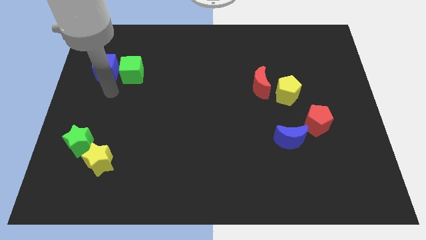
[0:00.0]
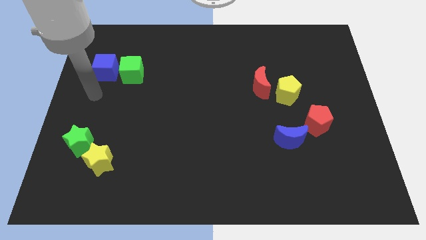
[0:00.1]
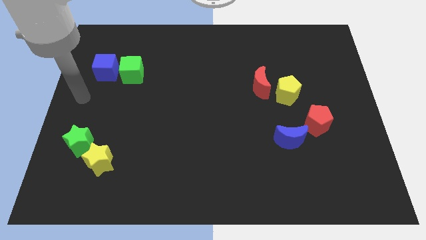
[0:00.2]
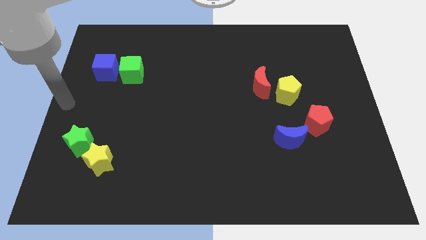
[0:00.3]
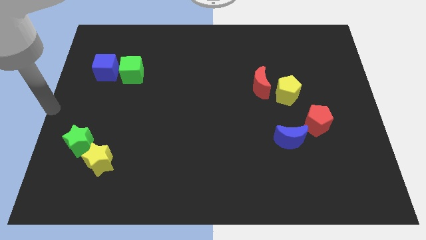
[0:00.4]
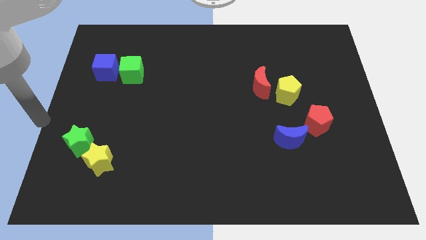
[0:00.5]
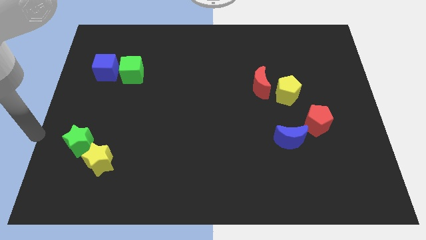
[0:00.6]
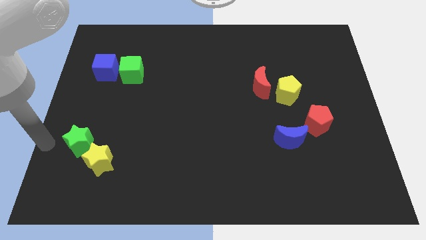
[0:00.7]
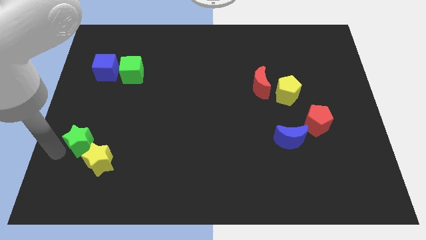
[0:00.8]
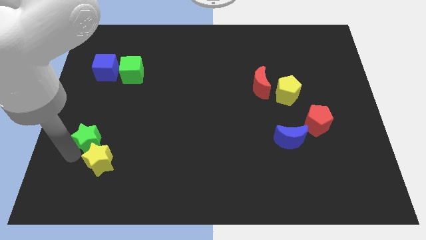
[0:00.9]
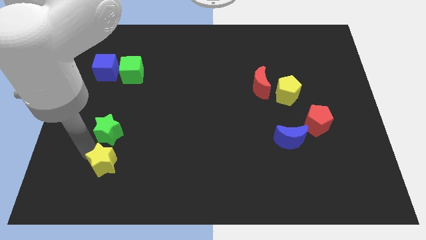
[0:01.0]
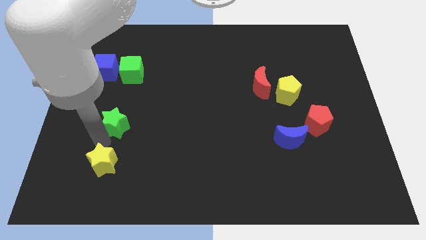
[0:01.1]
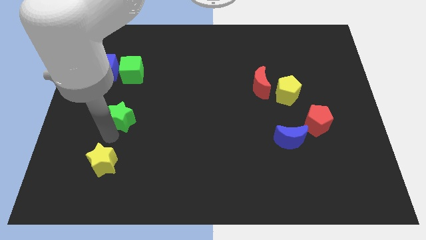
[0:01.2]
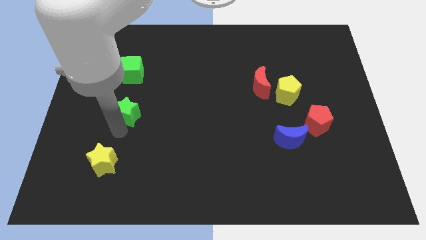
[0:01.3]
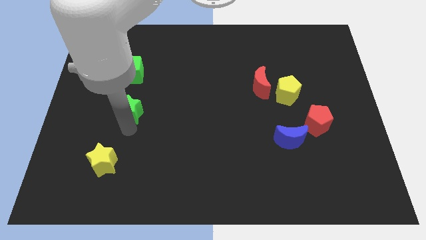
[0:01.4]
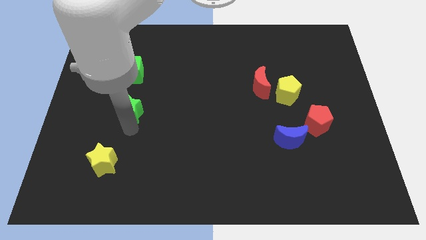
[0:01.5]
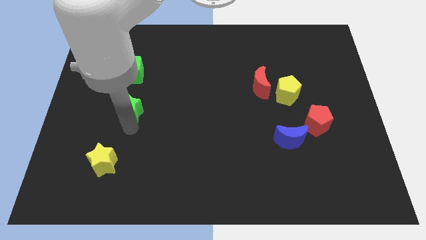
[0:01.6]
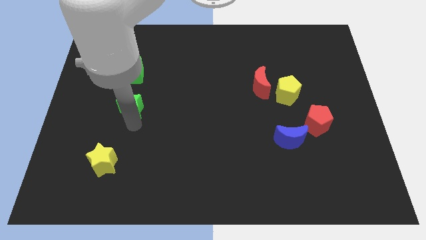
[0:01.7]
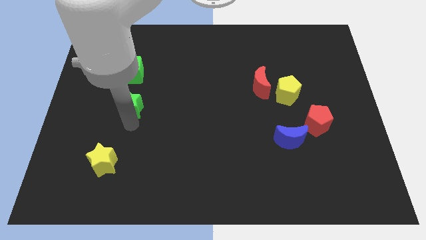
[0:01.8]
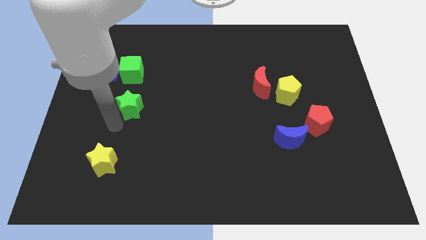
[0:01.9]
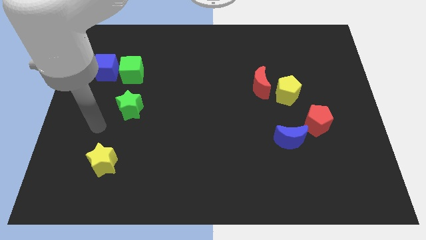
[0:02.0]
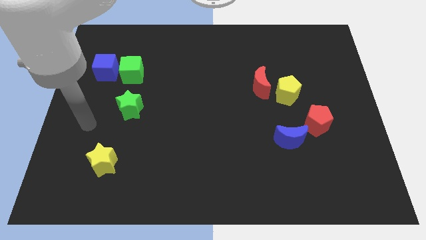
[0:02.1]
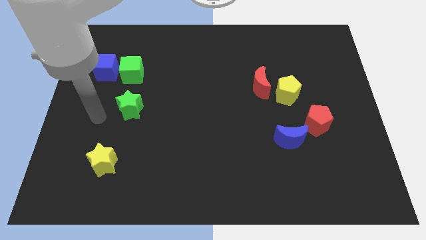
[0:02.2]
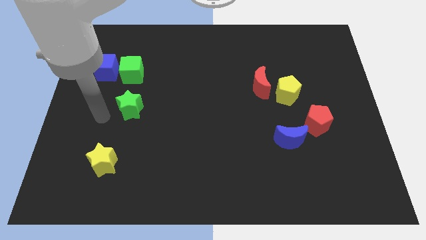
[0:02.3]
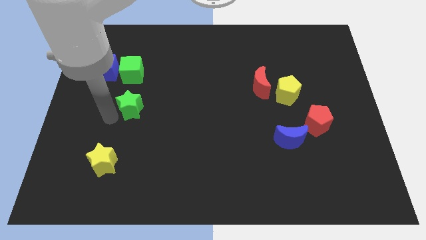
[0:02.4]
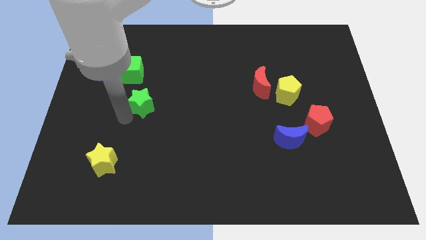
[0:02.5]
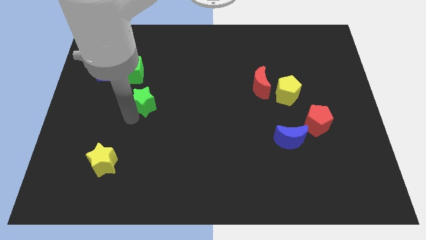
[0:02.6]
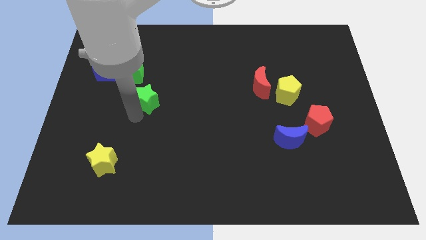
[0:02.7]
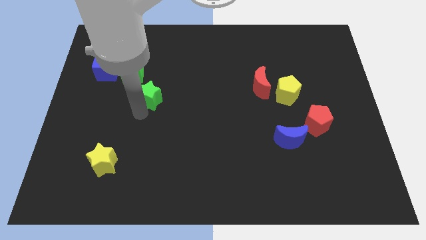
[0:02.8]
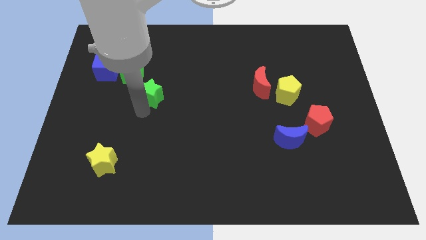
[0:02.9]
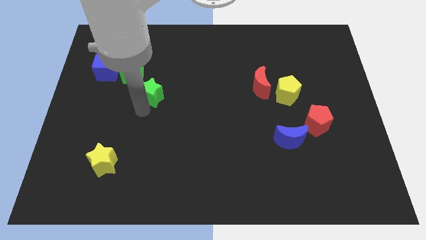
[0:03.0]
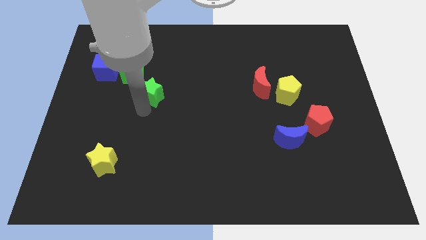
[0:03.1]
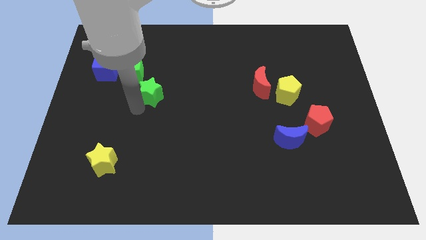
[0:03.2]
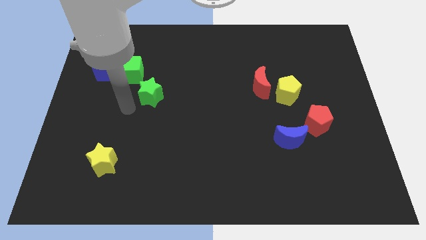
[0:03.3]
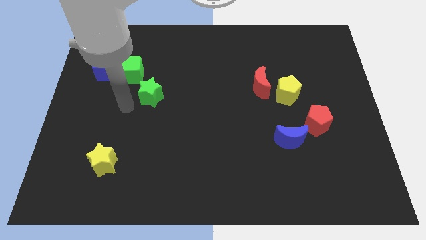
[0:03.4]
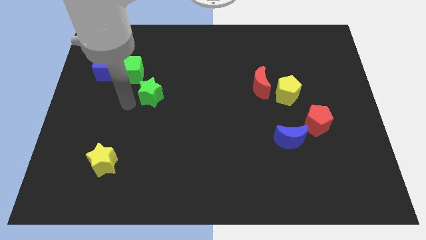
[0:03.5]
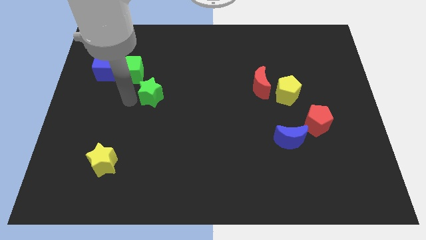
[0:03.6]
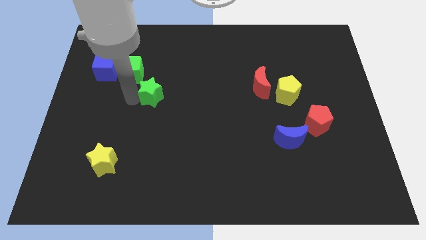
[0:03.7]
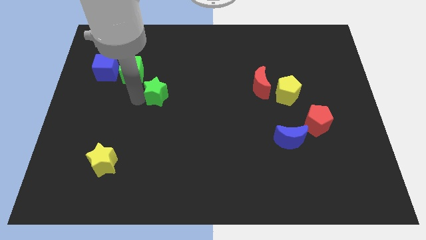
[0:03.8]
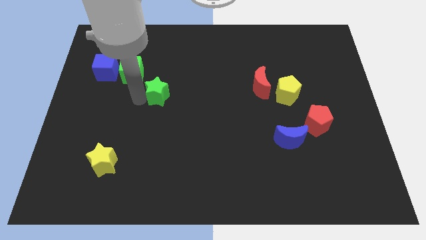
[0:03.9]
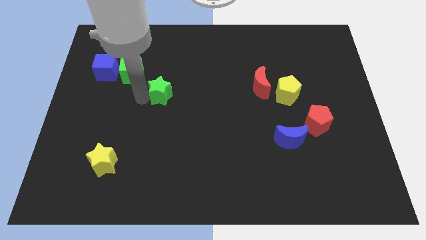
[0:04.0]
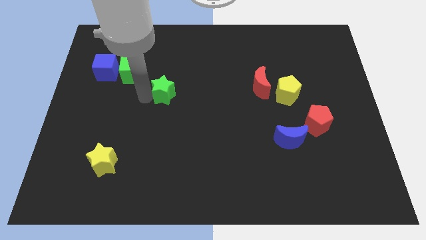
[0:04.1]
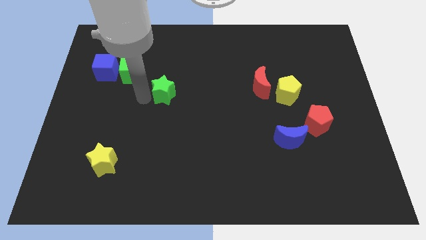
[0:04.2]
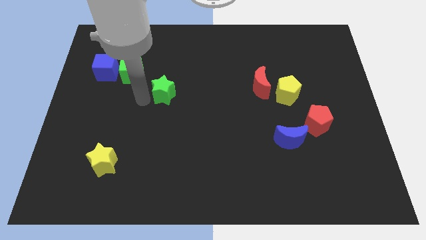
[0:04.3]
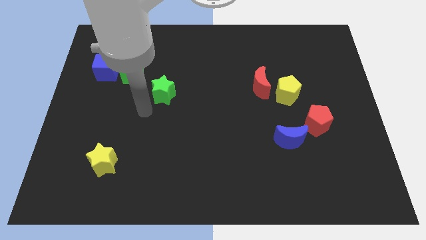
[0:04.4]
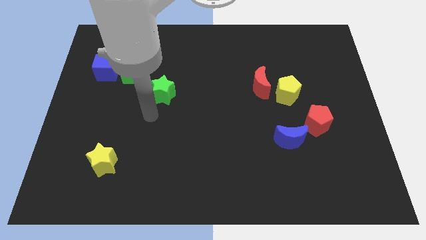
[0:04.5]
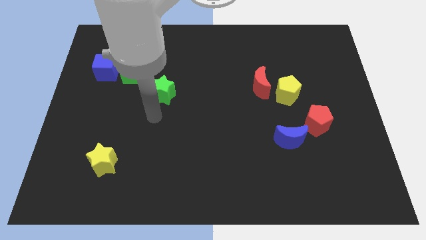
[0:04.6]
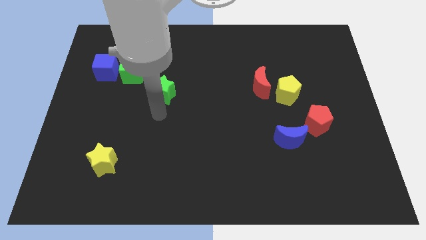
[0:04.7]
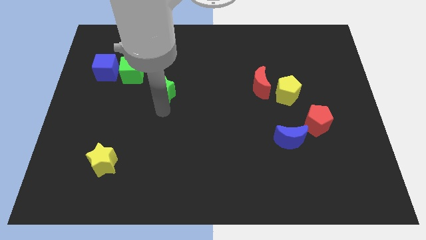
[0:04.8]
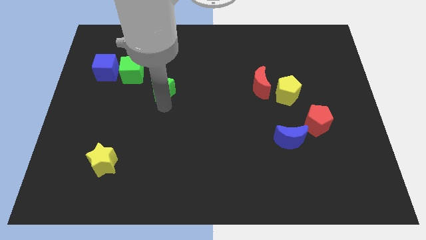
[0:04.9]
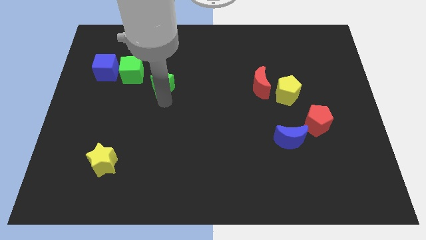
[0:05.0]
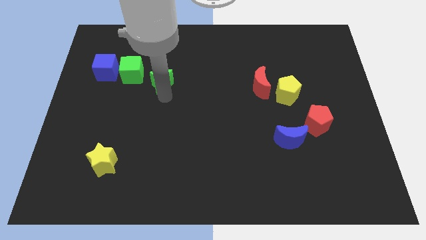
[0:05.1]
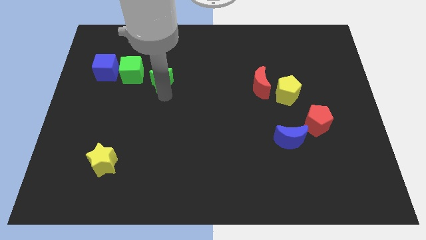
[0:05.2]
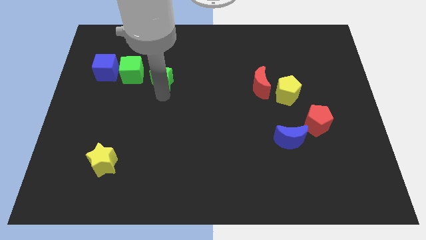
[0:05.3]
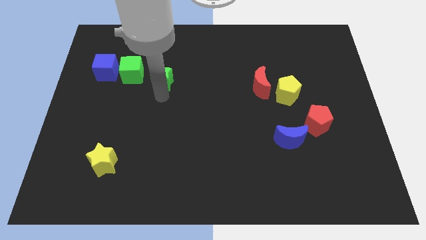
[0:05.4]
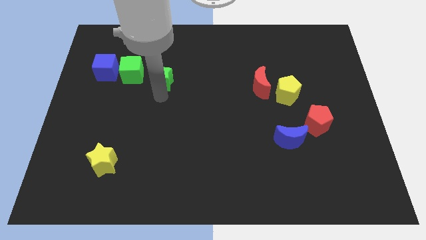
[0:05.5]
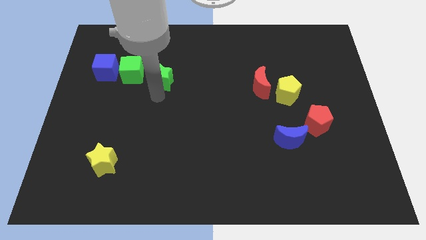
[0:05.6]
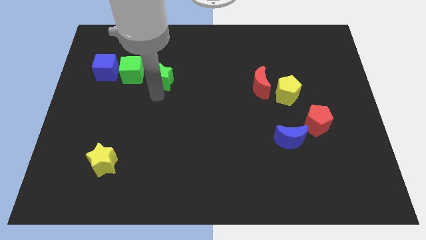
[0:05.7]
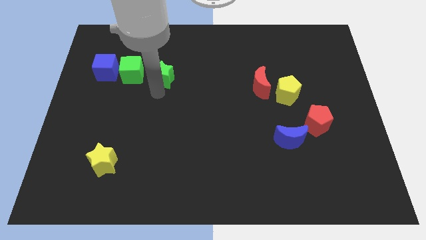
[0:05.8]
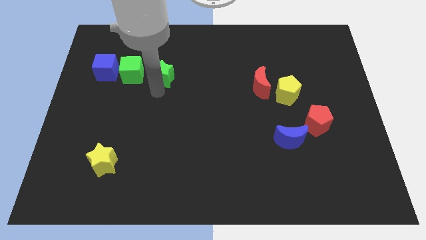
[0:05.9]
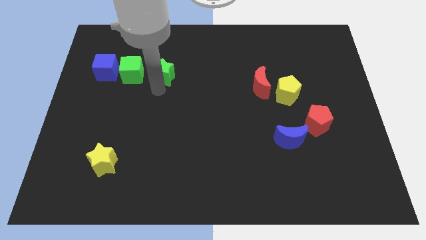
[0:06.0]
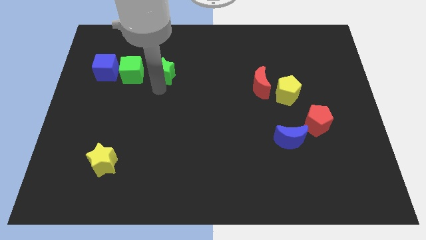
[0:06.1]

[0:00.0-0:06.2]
place the green star right to the green cube

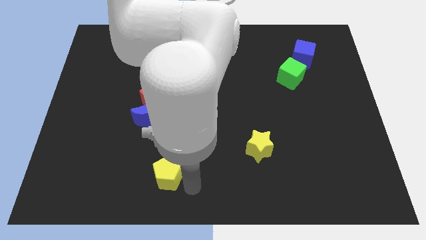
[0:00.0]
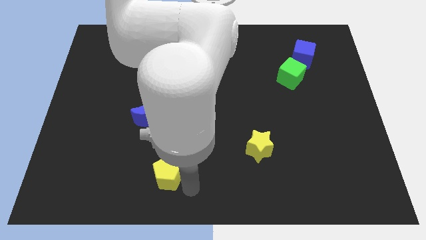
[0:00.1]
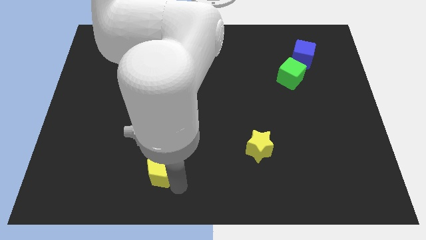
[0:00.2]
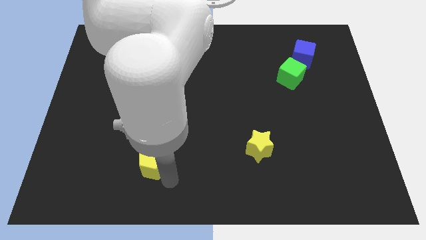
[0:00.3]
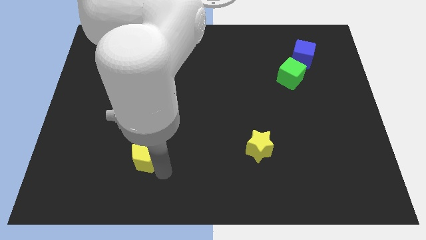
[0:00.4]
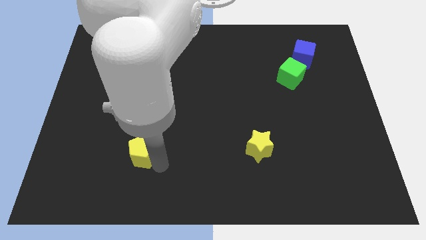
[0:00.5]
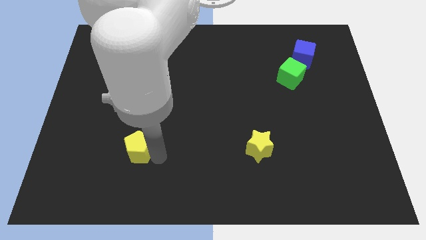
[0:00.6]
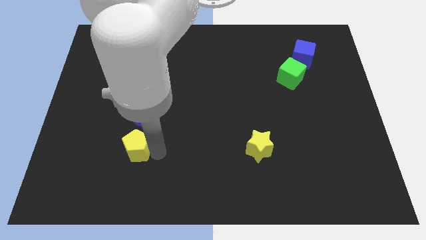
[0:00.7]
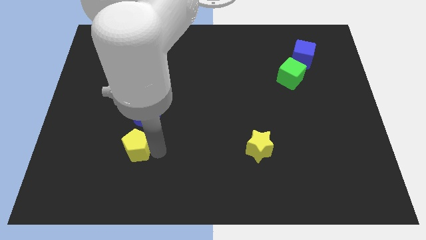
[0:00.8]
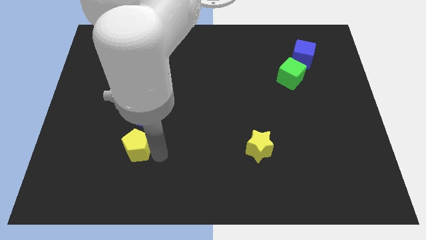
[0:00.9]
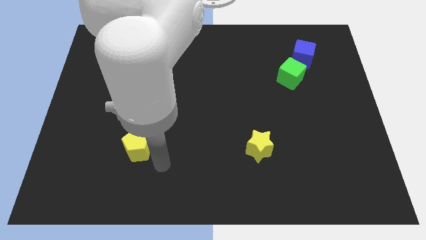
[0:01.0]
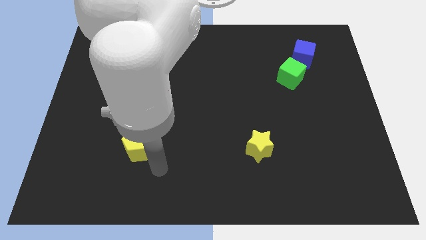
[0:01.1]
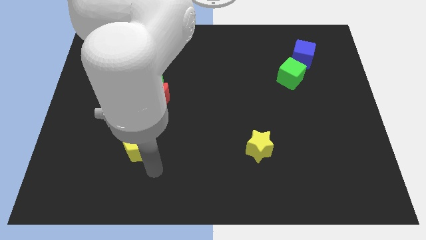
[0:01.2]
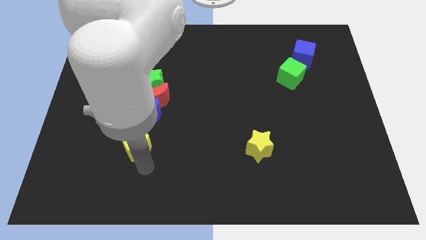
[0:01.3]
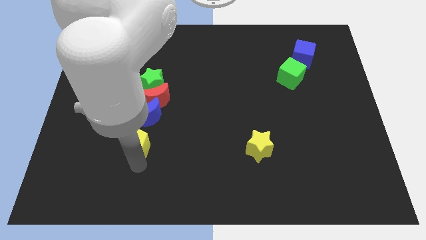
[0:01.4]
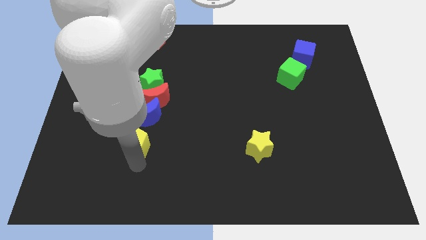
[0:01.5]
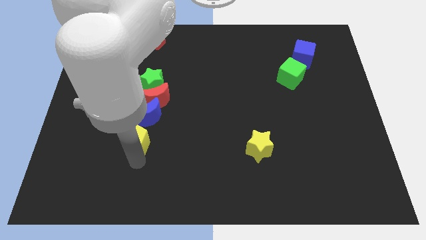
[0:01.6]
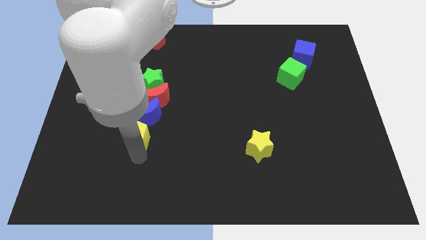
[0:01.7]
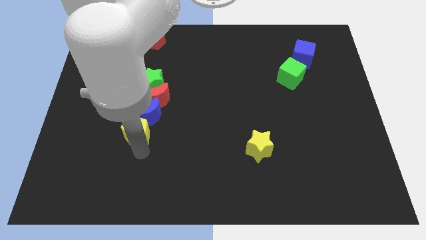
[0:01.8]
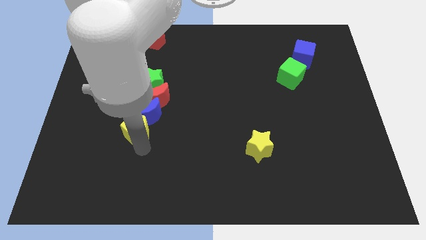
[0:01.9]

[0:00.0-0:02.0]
push the yellow pentagon into the blue moon

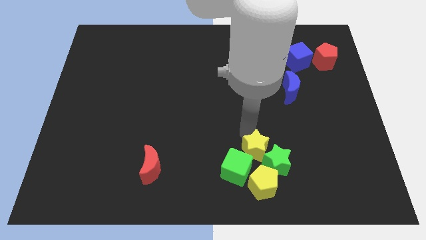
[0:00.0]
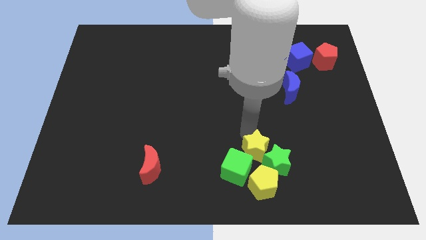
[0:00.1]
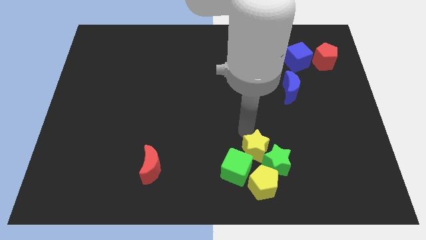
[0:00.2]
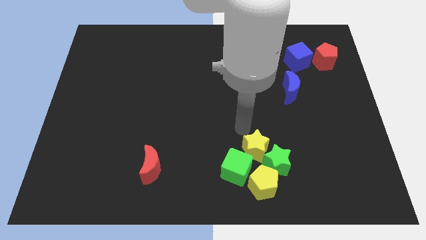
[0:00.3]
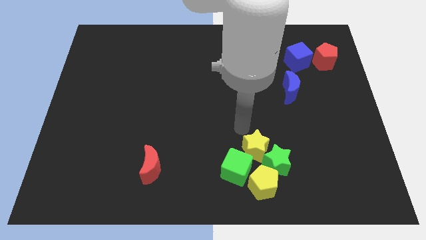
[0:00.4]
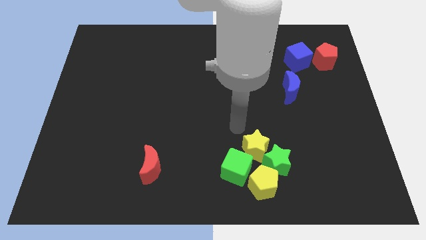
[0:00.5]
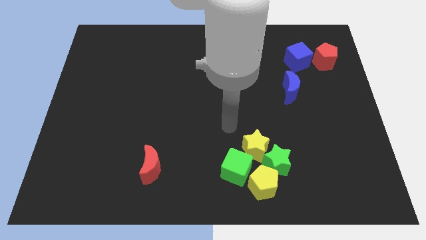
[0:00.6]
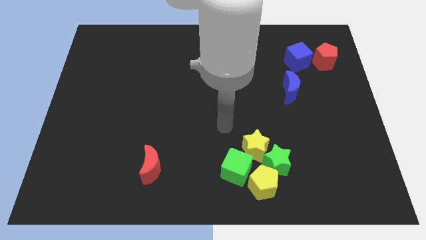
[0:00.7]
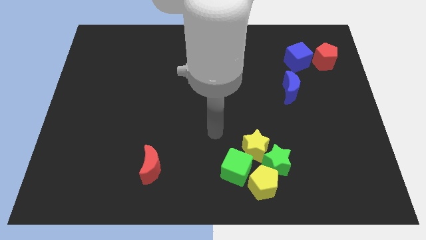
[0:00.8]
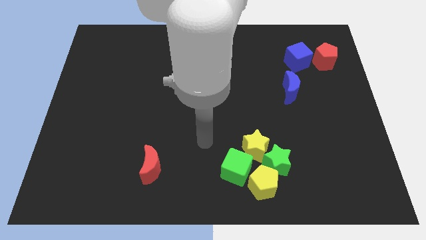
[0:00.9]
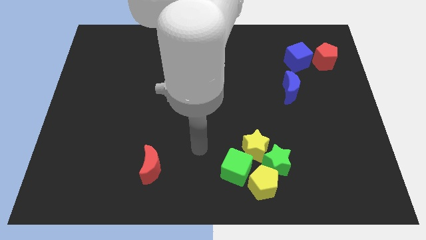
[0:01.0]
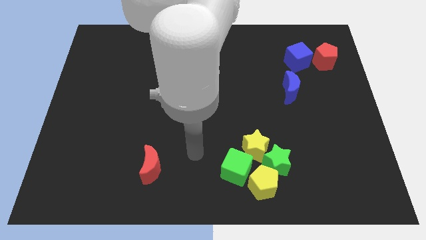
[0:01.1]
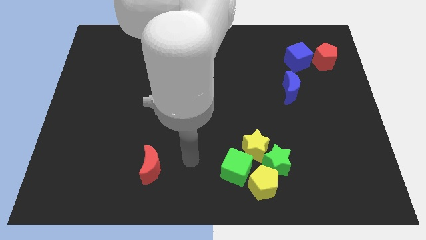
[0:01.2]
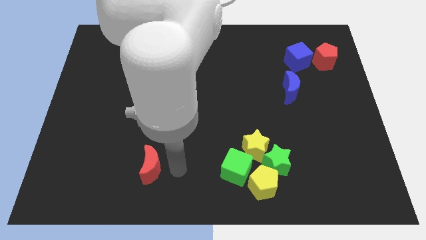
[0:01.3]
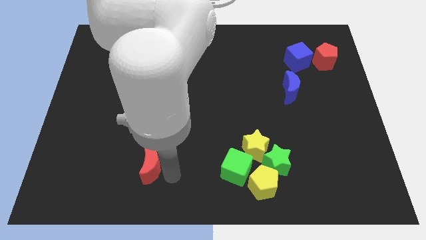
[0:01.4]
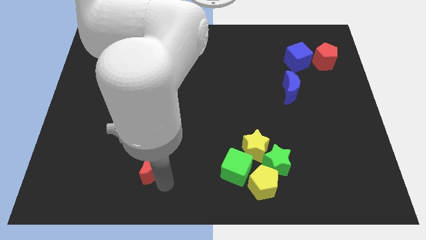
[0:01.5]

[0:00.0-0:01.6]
place your hand parallel right to the red crescent
